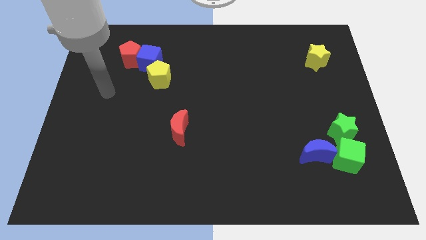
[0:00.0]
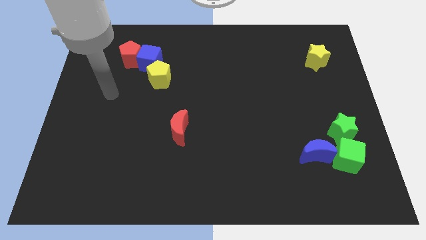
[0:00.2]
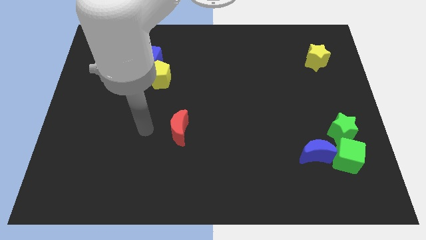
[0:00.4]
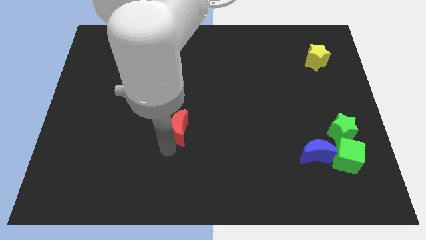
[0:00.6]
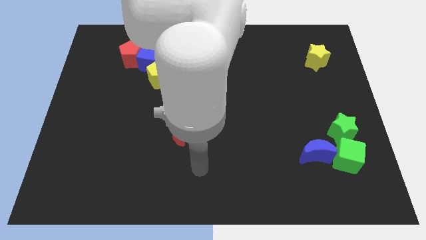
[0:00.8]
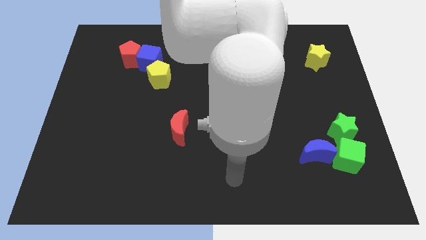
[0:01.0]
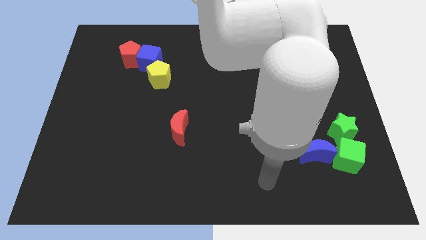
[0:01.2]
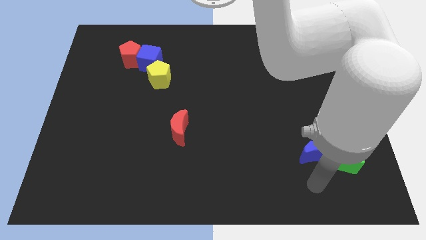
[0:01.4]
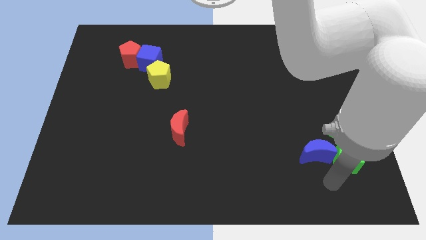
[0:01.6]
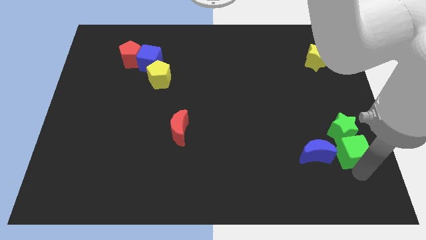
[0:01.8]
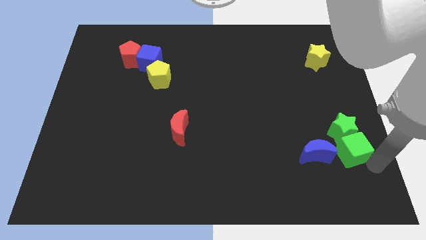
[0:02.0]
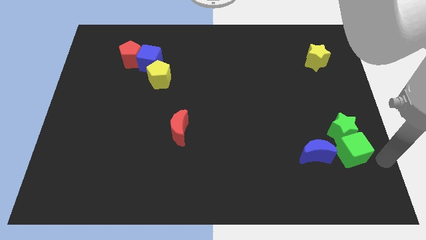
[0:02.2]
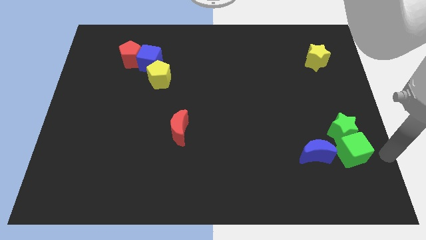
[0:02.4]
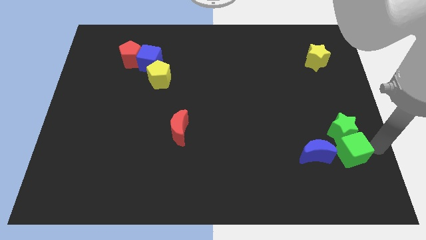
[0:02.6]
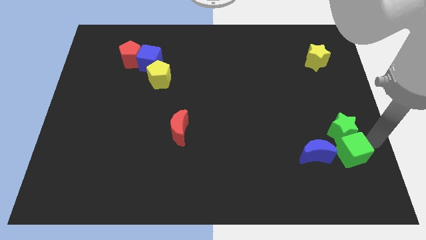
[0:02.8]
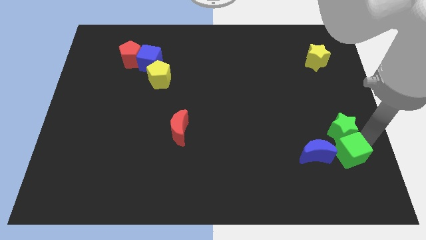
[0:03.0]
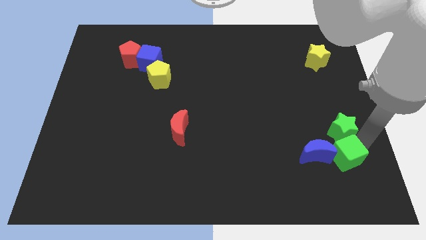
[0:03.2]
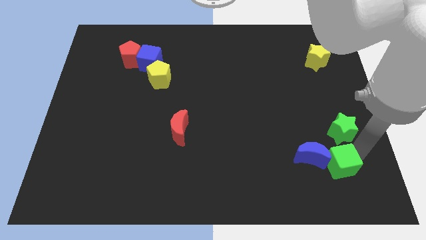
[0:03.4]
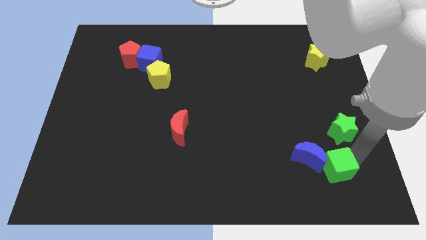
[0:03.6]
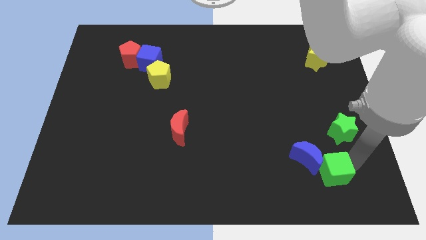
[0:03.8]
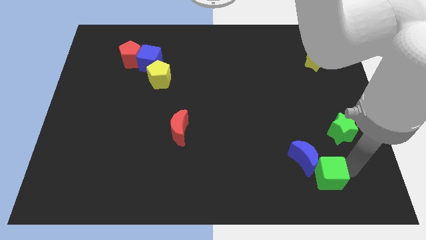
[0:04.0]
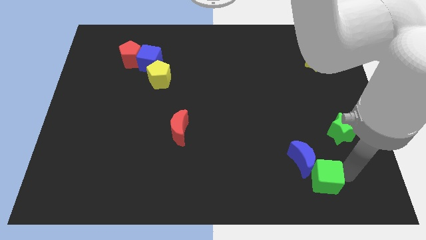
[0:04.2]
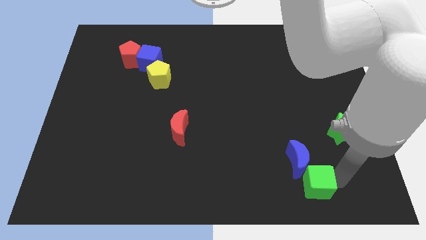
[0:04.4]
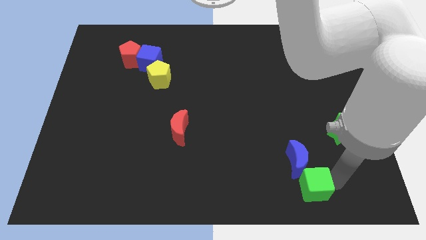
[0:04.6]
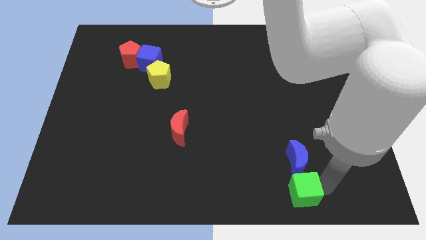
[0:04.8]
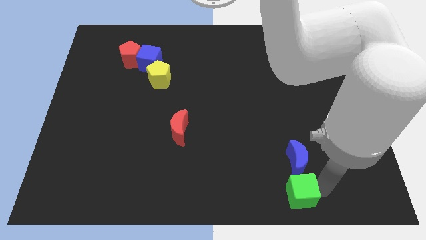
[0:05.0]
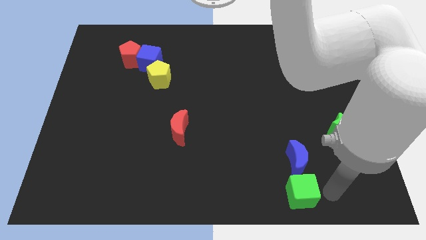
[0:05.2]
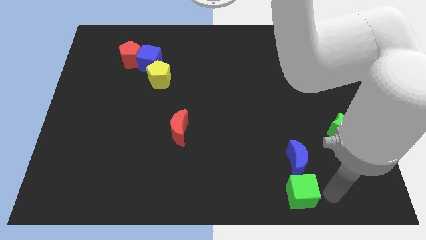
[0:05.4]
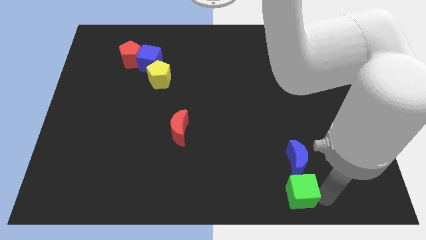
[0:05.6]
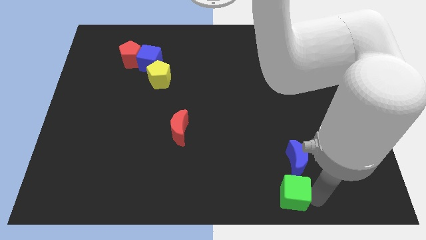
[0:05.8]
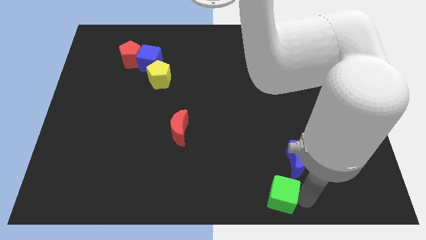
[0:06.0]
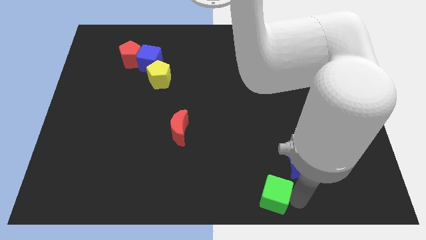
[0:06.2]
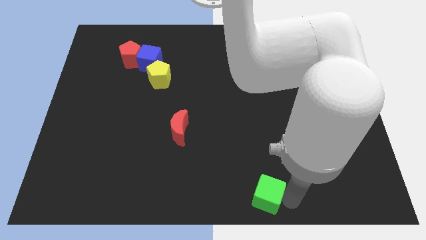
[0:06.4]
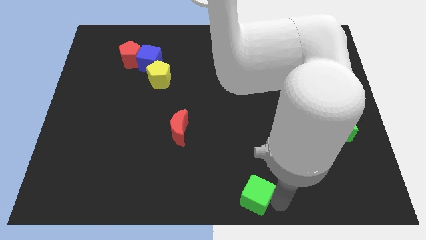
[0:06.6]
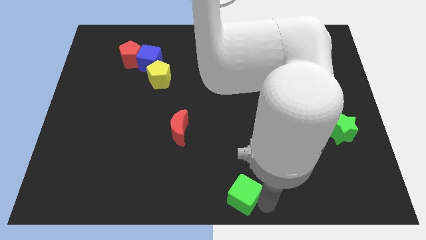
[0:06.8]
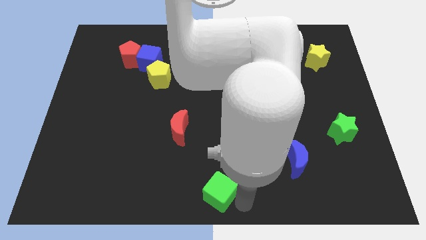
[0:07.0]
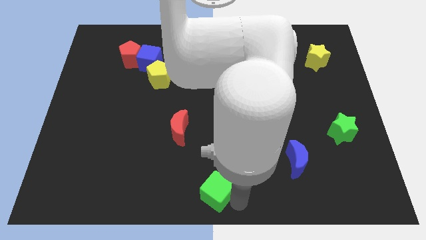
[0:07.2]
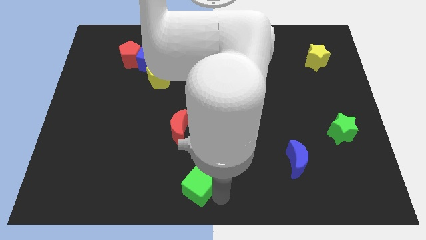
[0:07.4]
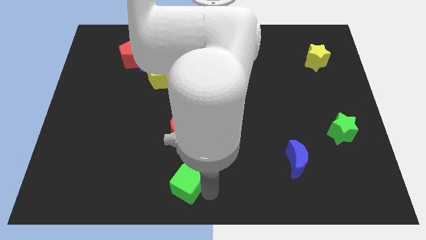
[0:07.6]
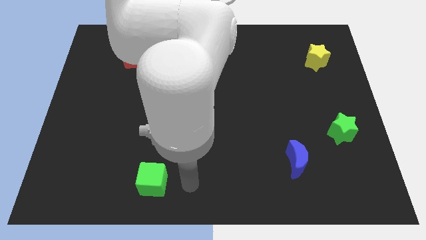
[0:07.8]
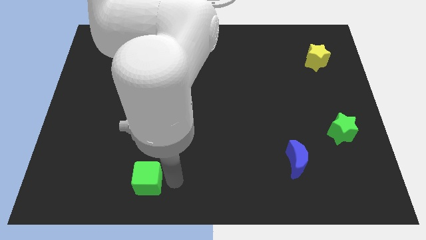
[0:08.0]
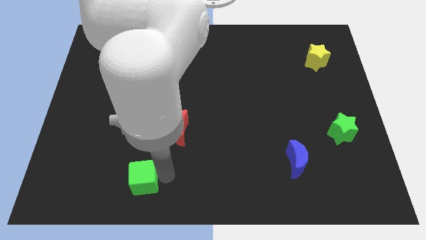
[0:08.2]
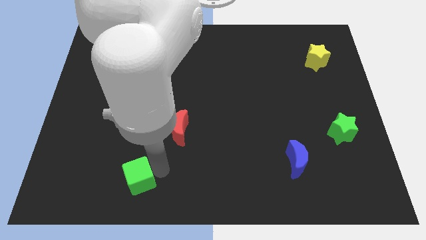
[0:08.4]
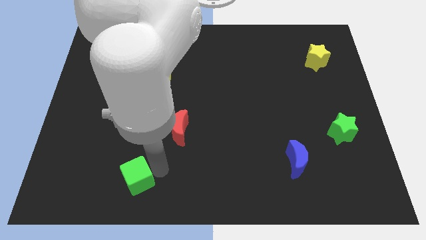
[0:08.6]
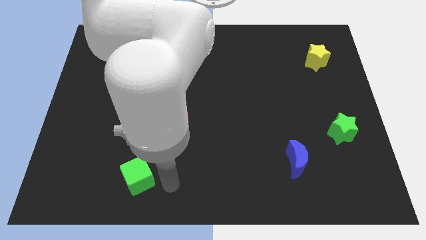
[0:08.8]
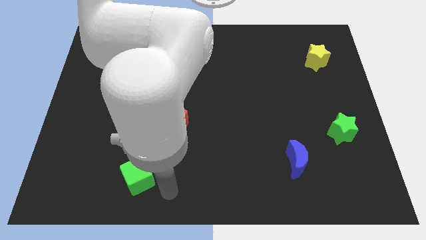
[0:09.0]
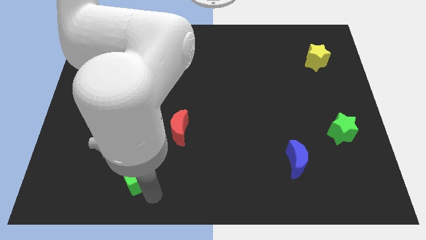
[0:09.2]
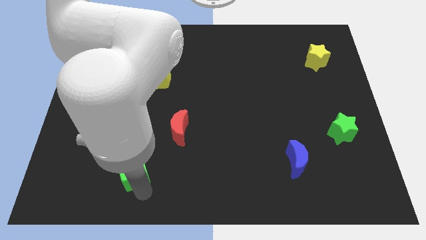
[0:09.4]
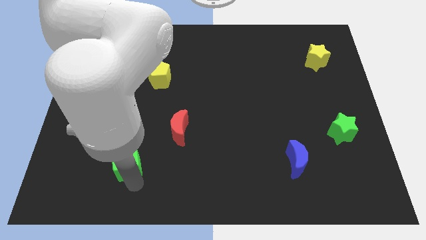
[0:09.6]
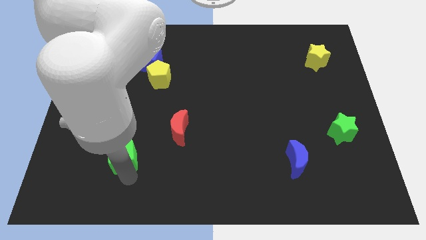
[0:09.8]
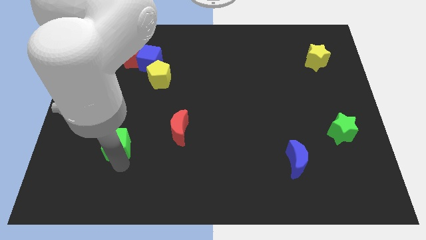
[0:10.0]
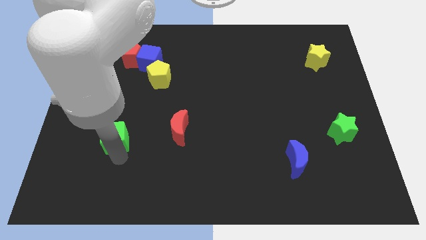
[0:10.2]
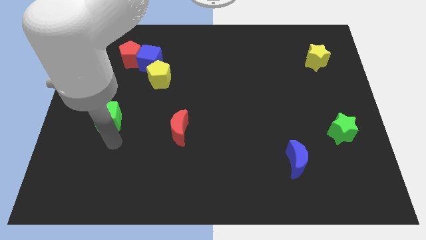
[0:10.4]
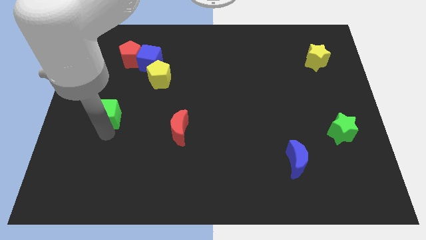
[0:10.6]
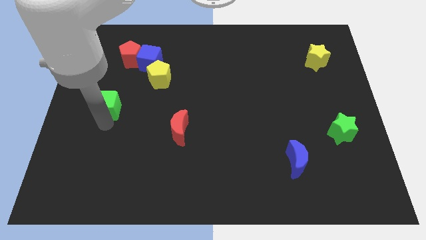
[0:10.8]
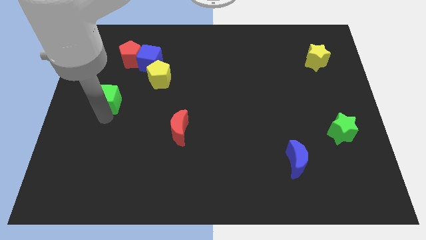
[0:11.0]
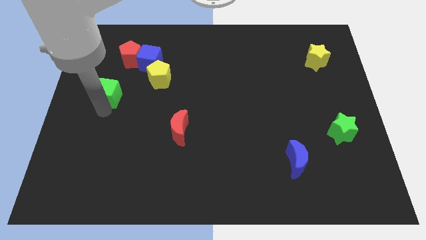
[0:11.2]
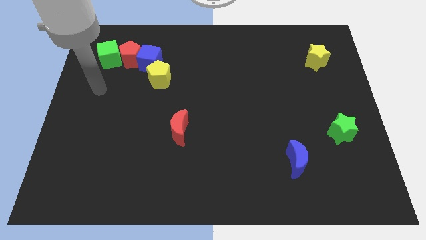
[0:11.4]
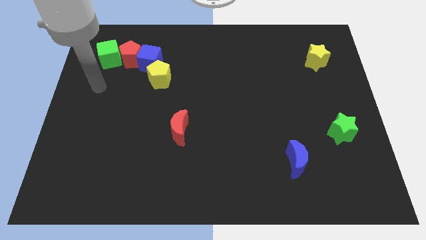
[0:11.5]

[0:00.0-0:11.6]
push the green cube towards the red pentagon

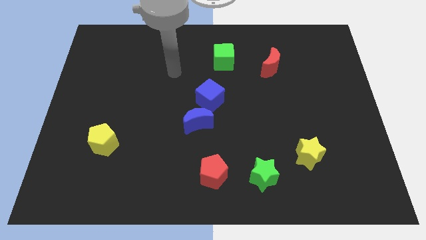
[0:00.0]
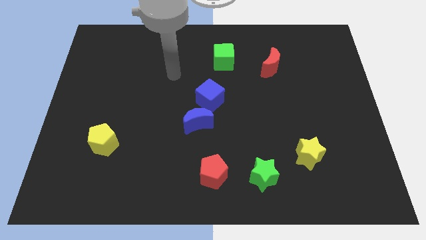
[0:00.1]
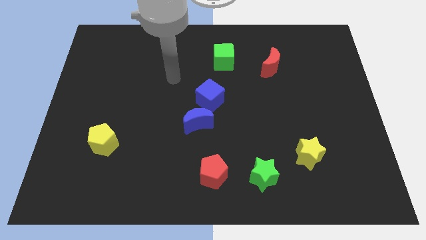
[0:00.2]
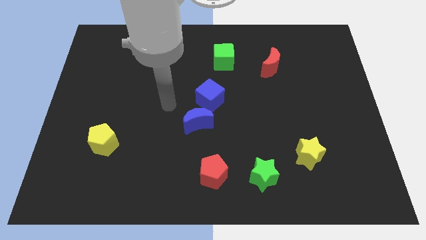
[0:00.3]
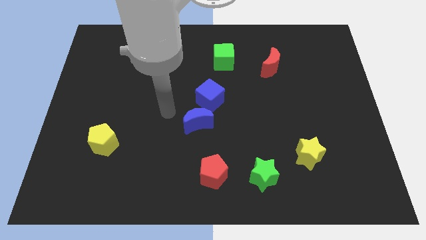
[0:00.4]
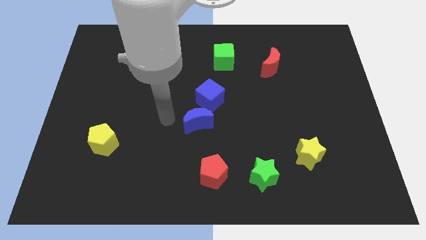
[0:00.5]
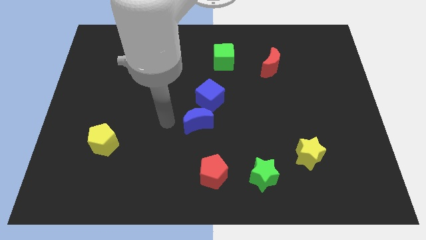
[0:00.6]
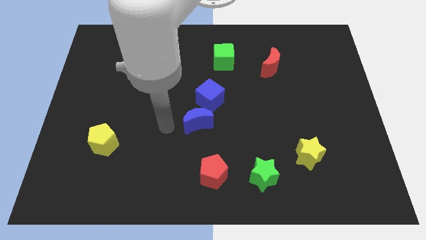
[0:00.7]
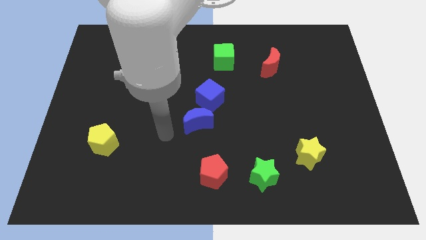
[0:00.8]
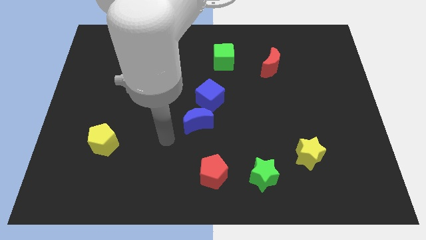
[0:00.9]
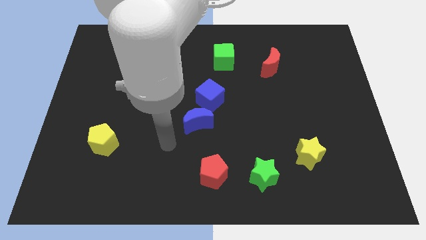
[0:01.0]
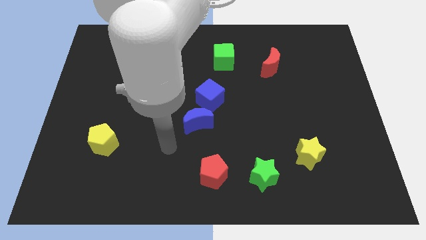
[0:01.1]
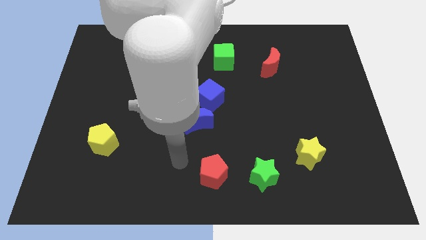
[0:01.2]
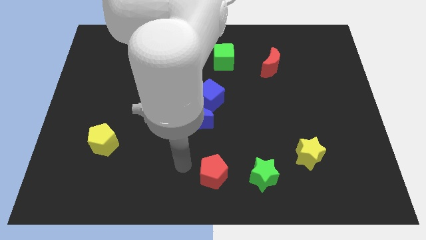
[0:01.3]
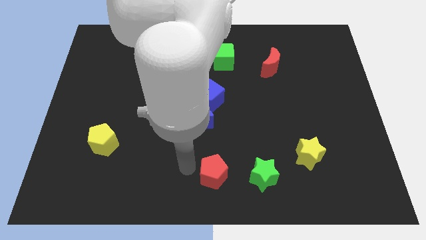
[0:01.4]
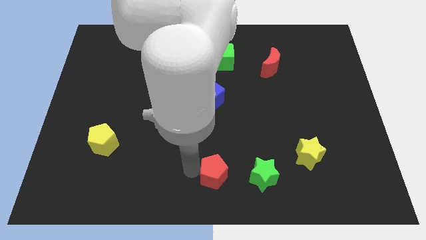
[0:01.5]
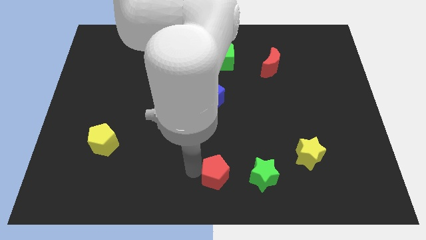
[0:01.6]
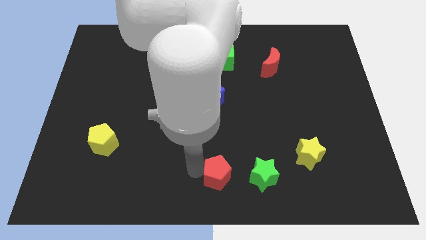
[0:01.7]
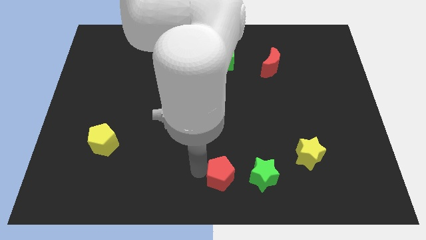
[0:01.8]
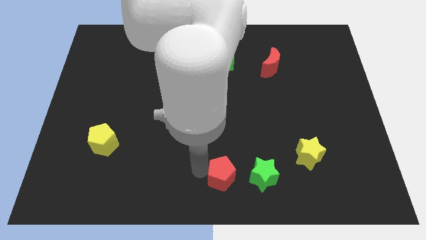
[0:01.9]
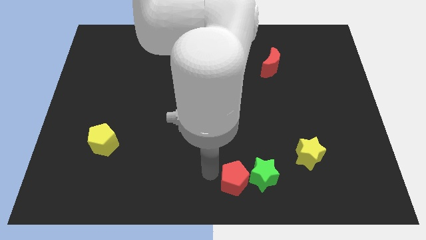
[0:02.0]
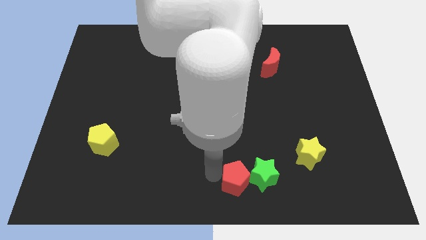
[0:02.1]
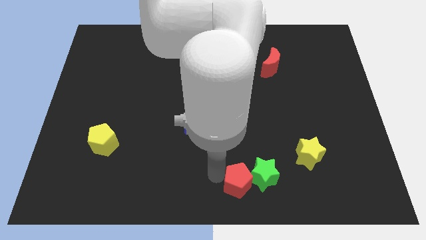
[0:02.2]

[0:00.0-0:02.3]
move the red pentagon next to the green star
